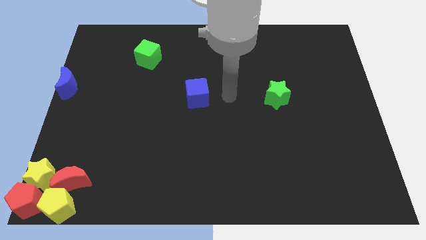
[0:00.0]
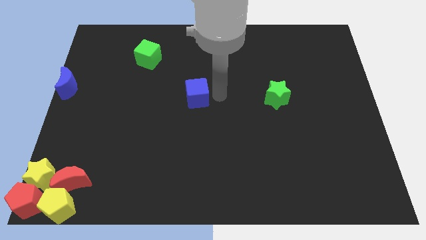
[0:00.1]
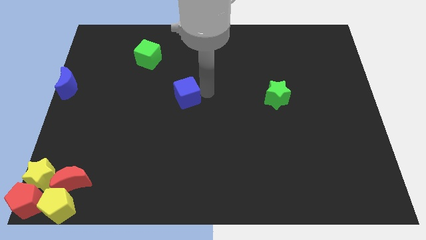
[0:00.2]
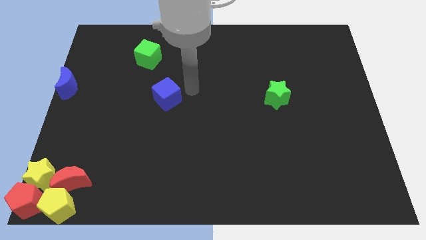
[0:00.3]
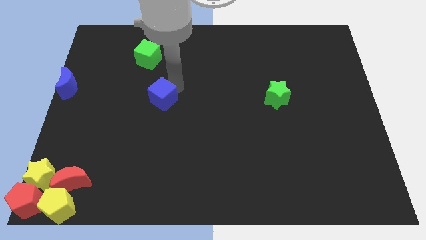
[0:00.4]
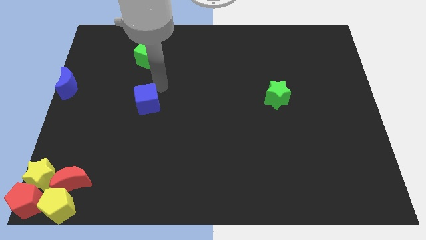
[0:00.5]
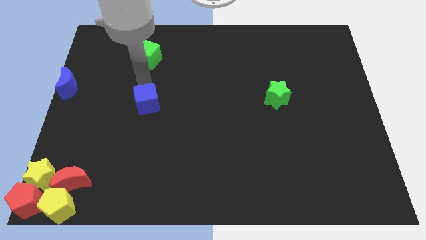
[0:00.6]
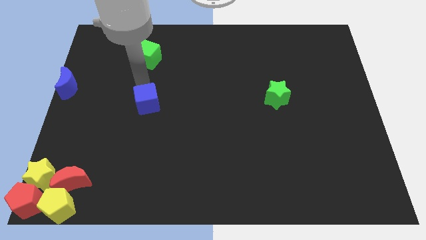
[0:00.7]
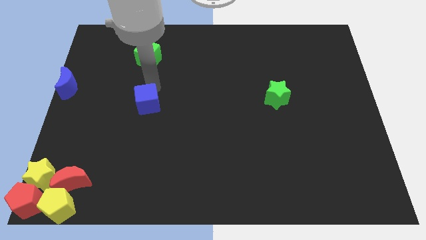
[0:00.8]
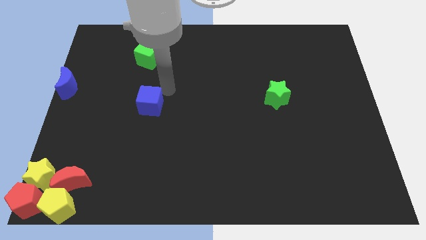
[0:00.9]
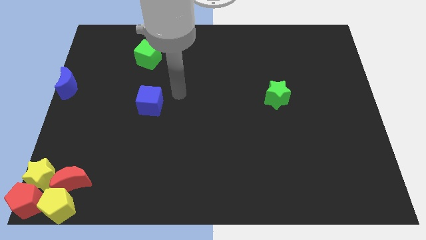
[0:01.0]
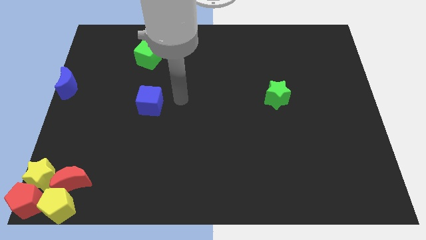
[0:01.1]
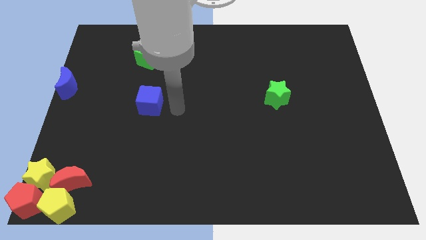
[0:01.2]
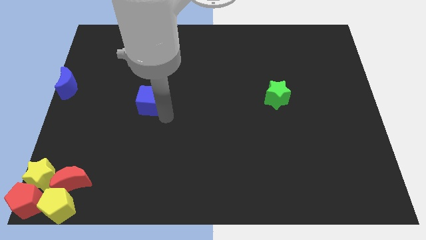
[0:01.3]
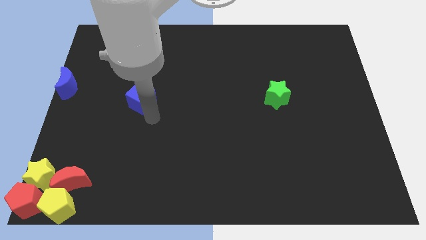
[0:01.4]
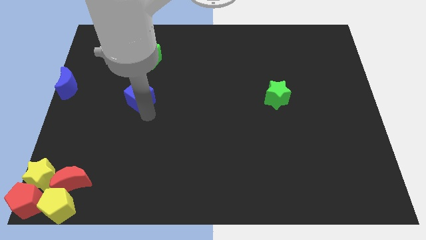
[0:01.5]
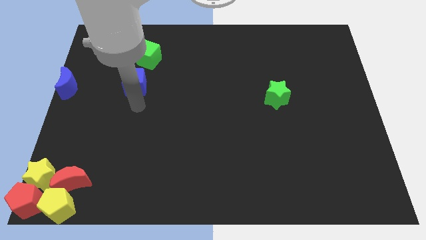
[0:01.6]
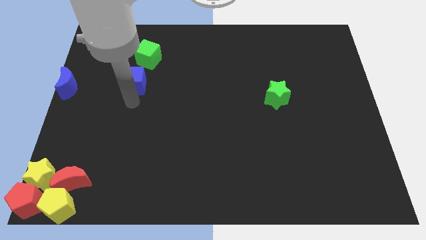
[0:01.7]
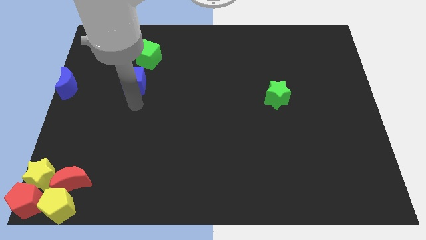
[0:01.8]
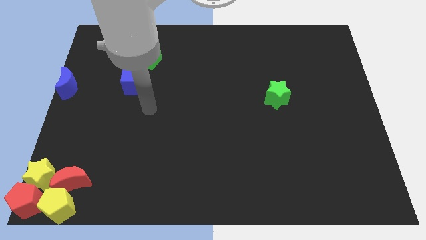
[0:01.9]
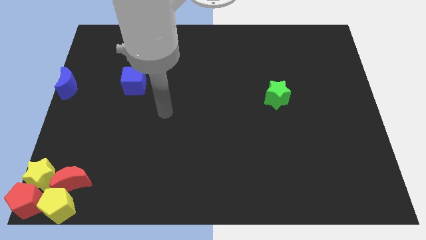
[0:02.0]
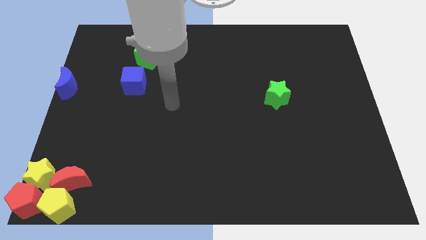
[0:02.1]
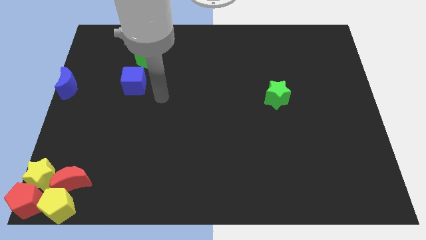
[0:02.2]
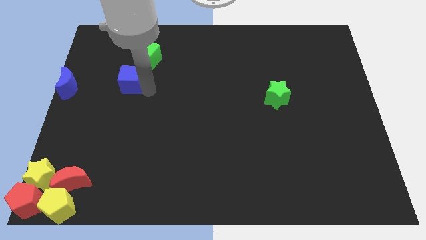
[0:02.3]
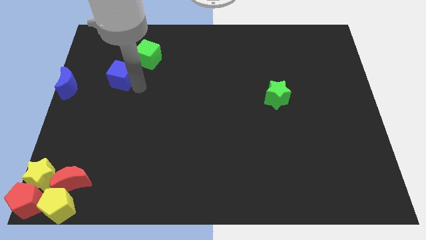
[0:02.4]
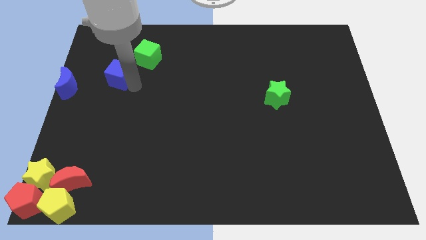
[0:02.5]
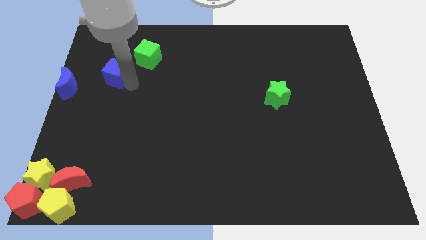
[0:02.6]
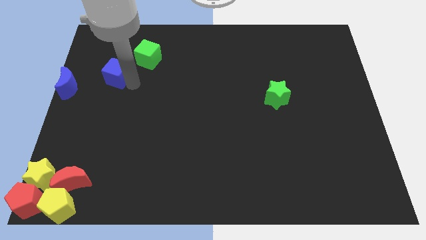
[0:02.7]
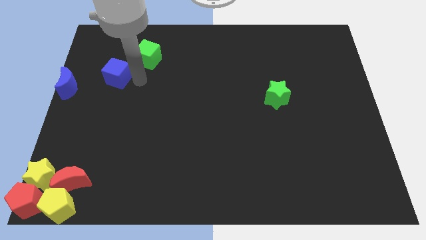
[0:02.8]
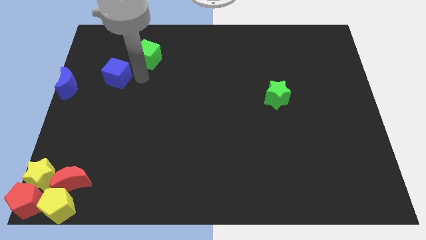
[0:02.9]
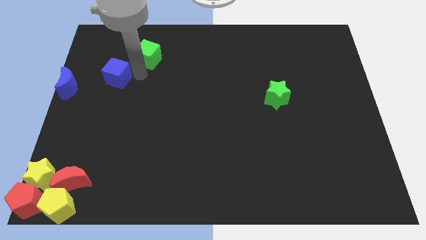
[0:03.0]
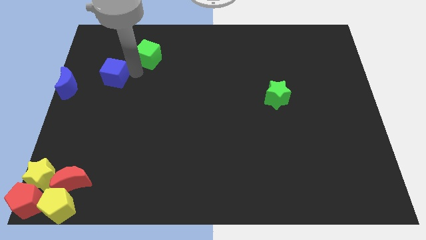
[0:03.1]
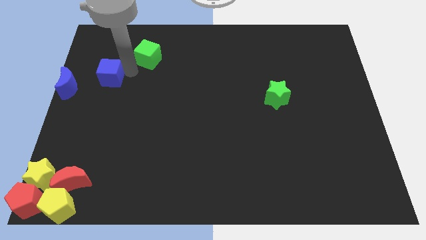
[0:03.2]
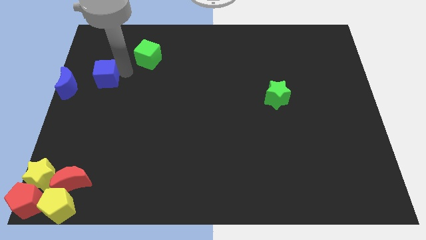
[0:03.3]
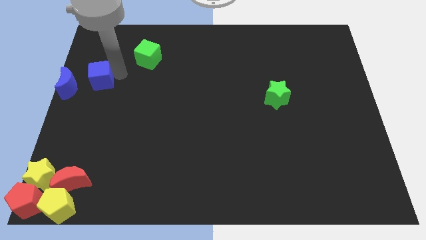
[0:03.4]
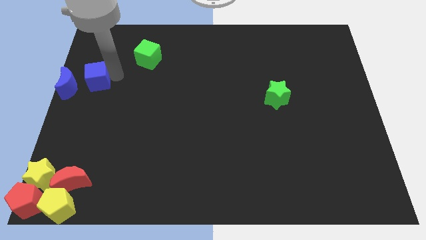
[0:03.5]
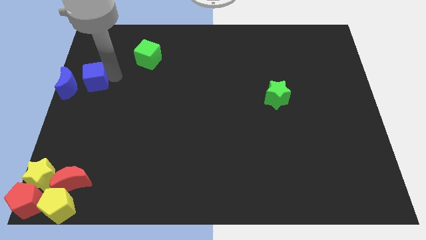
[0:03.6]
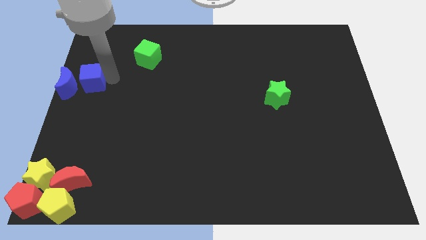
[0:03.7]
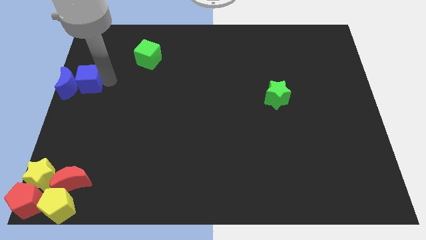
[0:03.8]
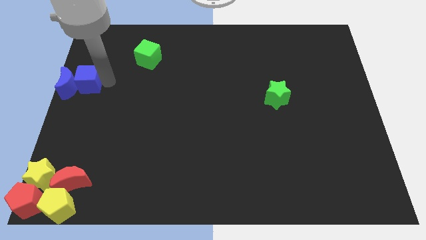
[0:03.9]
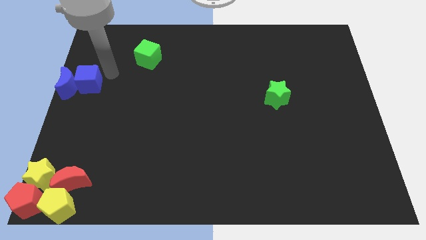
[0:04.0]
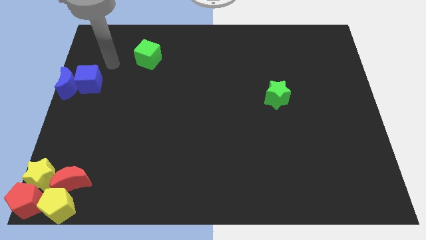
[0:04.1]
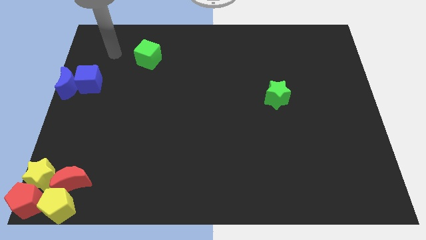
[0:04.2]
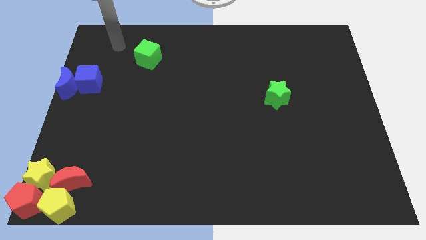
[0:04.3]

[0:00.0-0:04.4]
move the blue cube to the right side of the blue crescent

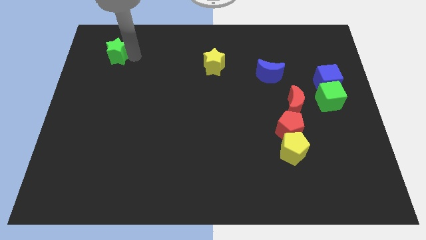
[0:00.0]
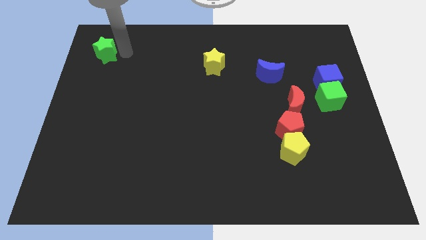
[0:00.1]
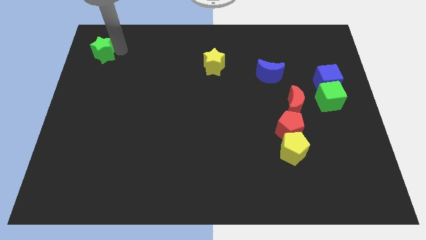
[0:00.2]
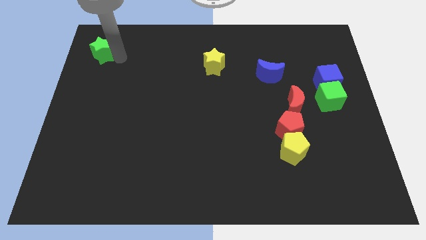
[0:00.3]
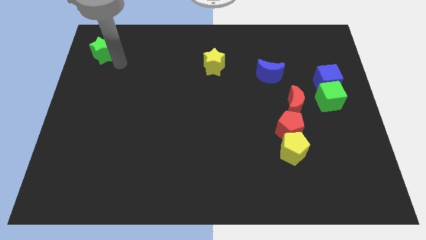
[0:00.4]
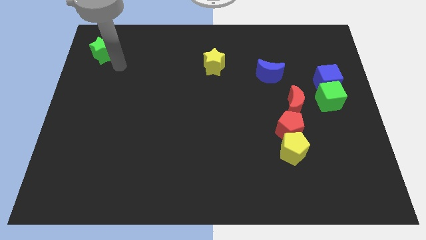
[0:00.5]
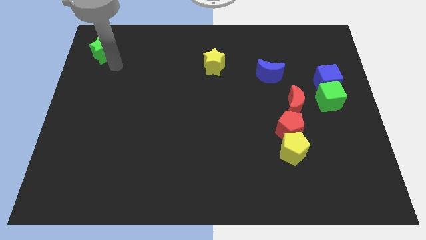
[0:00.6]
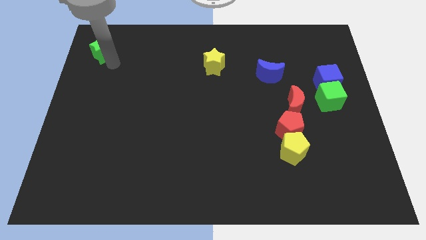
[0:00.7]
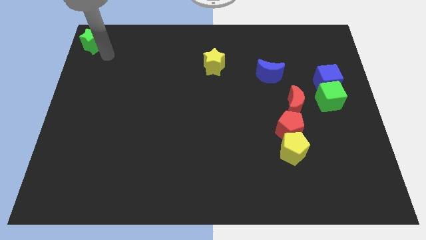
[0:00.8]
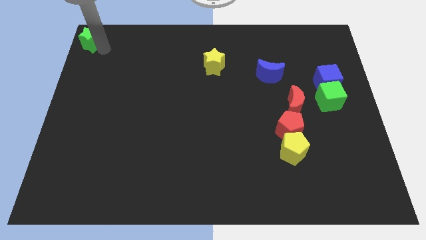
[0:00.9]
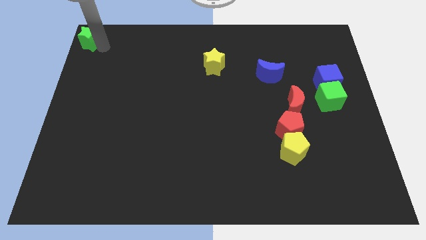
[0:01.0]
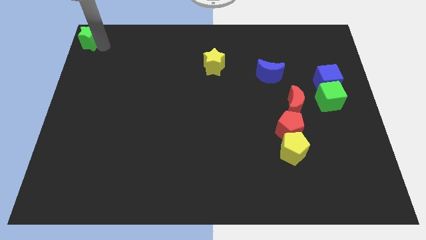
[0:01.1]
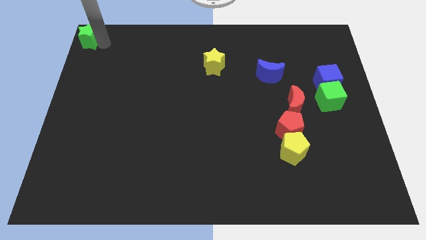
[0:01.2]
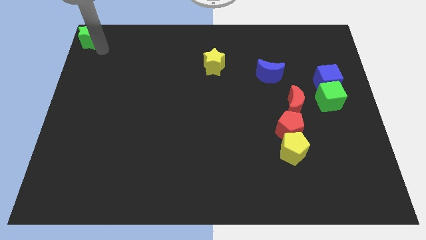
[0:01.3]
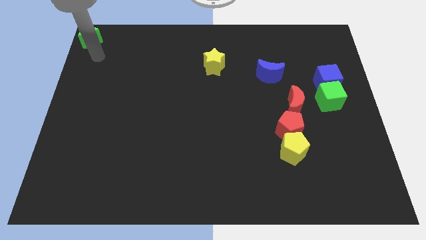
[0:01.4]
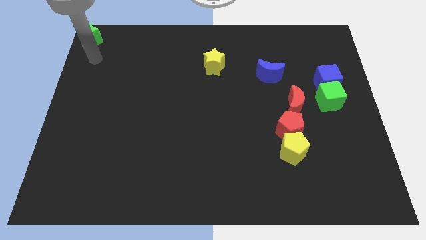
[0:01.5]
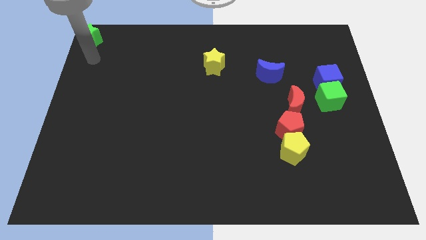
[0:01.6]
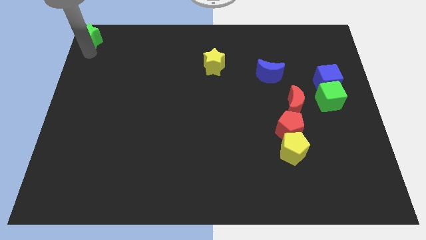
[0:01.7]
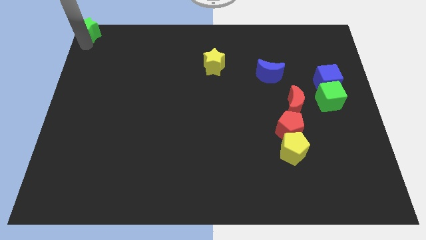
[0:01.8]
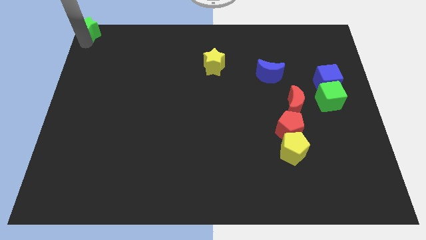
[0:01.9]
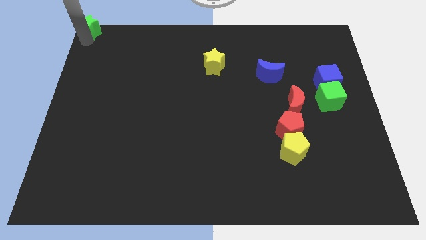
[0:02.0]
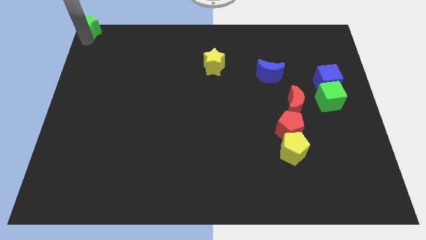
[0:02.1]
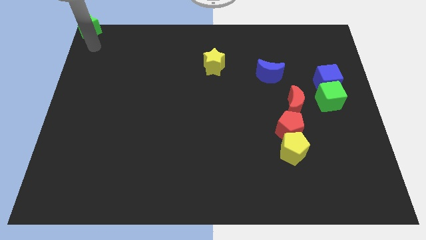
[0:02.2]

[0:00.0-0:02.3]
place the green star at the top left corner of the board

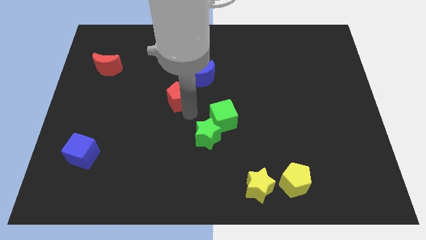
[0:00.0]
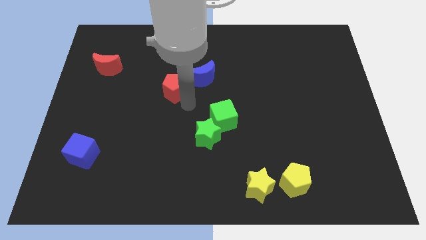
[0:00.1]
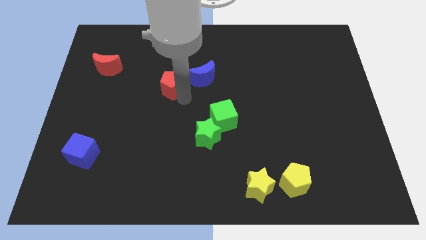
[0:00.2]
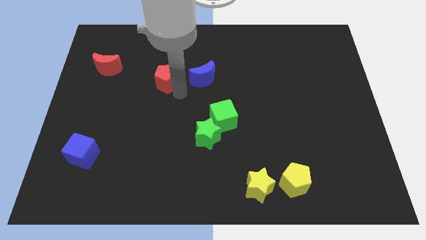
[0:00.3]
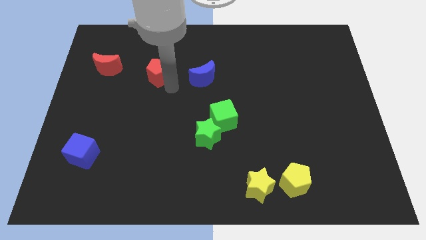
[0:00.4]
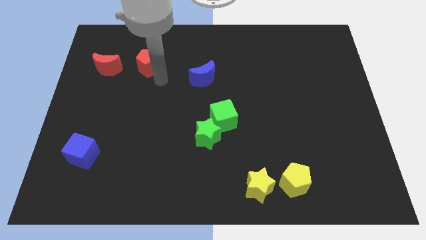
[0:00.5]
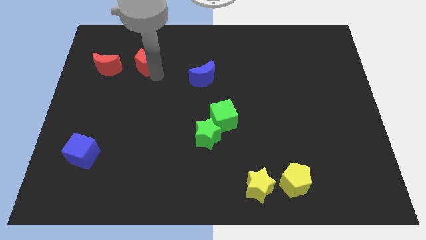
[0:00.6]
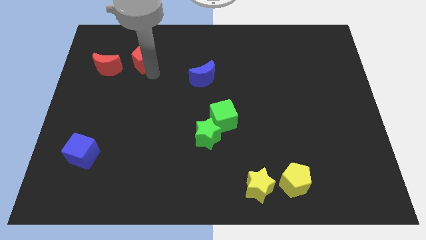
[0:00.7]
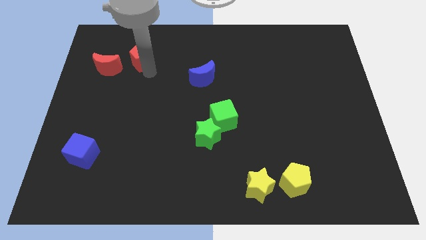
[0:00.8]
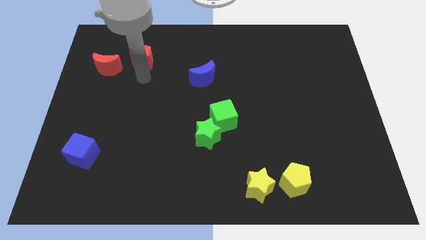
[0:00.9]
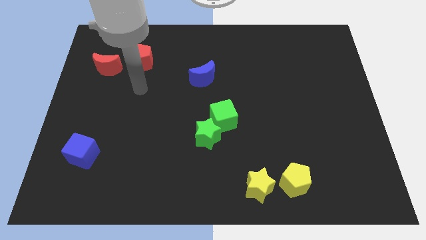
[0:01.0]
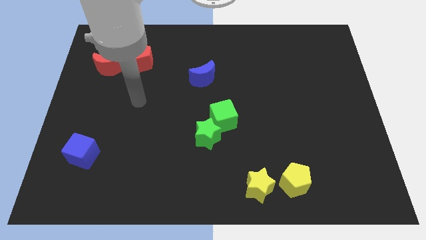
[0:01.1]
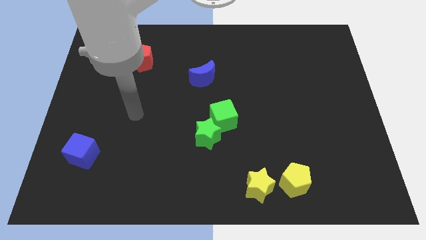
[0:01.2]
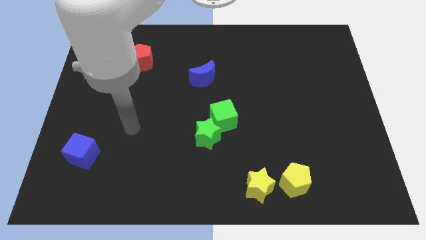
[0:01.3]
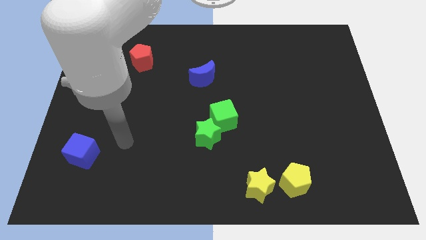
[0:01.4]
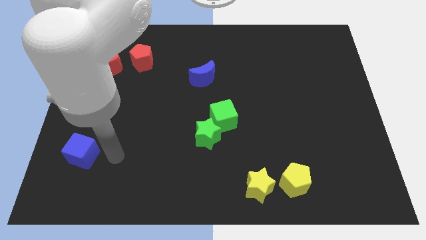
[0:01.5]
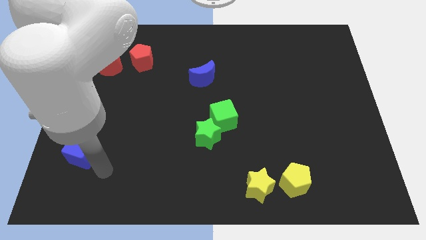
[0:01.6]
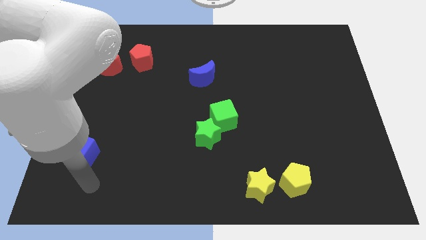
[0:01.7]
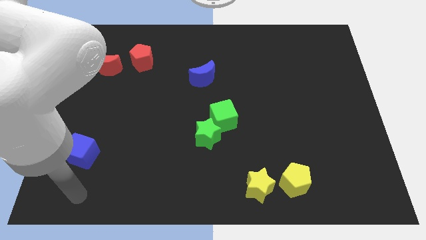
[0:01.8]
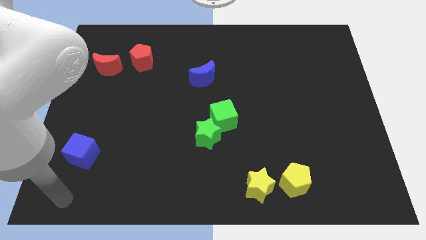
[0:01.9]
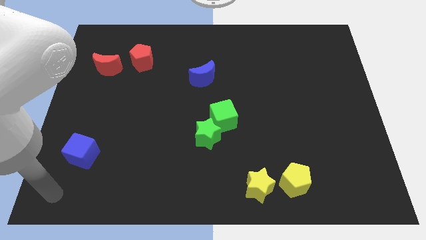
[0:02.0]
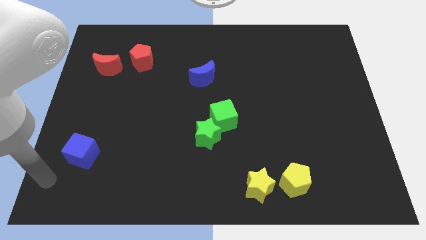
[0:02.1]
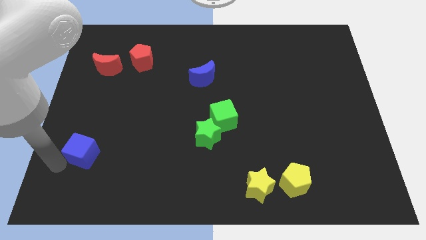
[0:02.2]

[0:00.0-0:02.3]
push the red pentagon right to the red crescent
